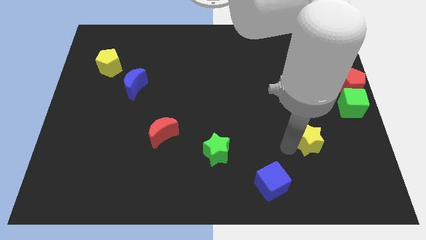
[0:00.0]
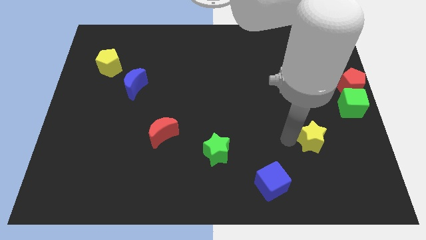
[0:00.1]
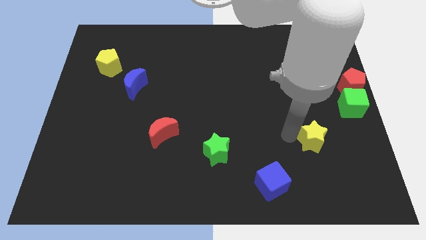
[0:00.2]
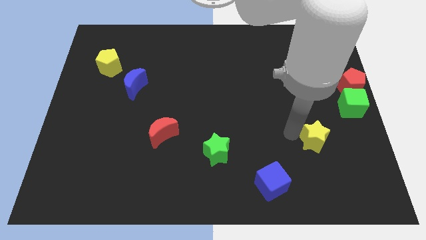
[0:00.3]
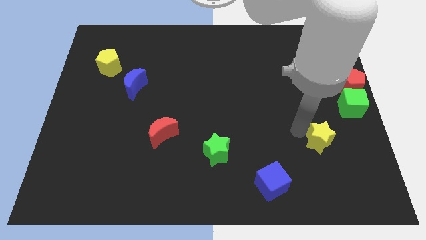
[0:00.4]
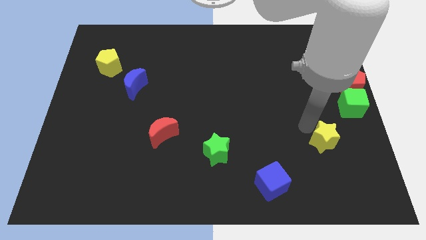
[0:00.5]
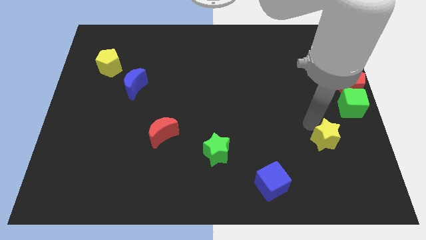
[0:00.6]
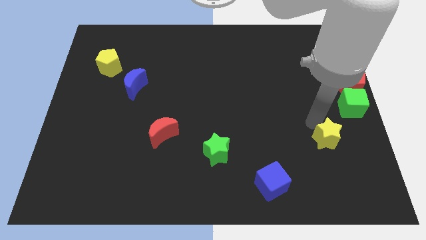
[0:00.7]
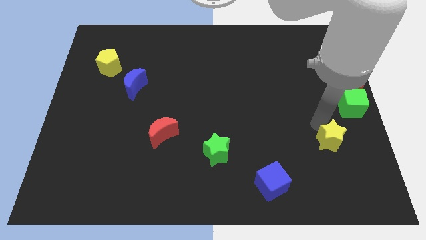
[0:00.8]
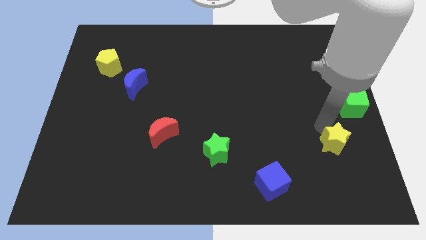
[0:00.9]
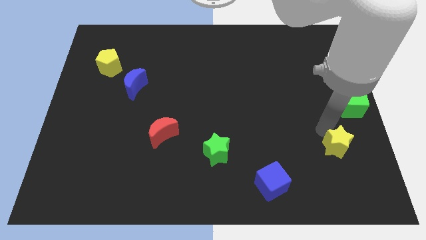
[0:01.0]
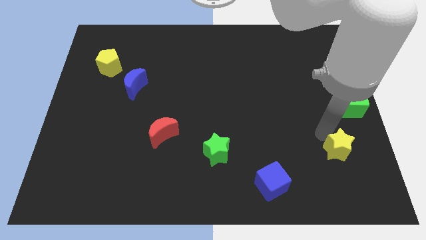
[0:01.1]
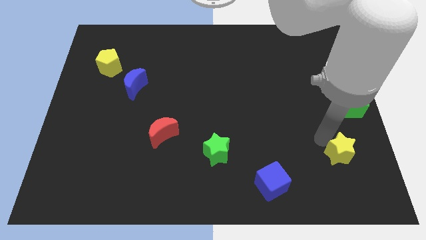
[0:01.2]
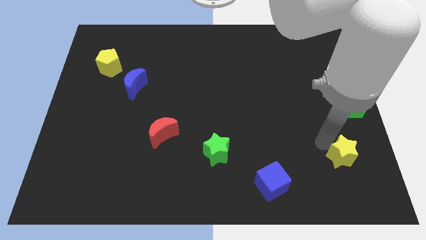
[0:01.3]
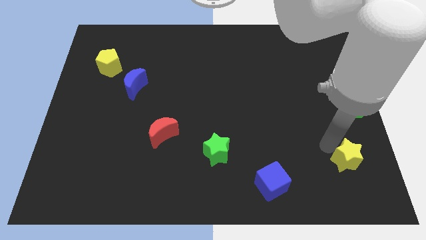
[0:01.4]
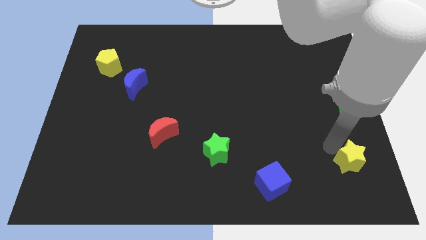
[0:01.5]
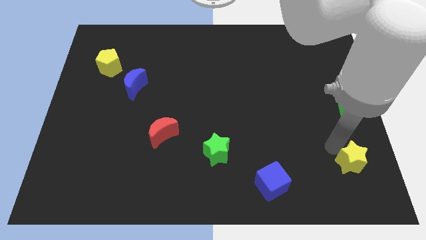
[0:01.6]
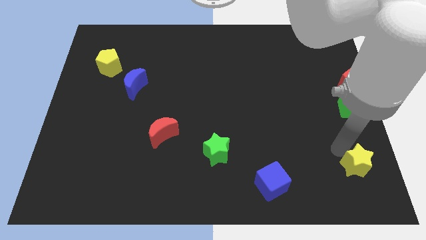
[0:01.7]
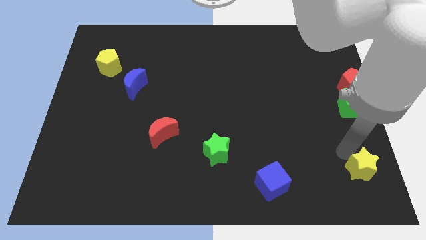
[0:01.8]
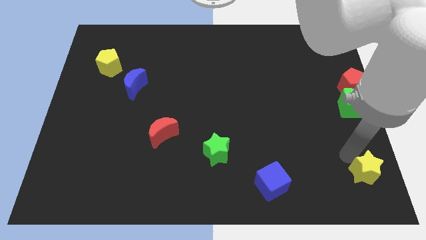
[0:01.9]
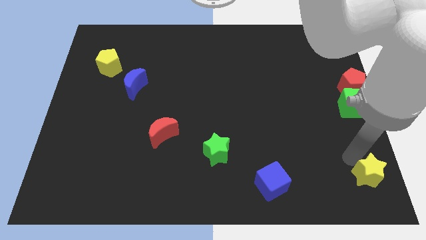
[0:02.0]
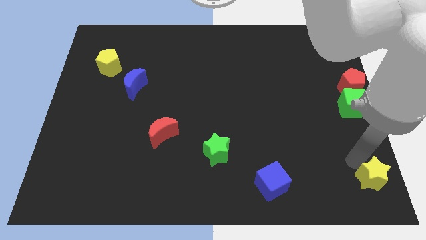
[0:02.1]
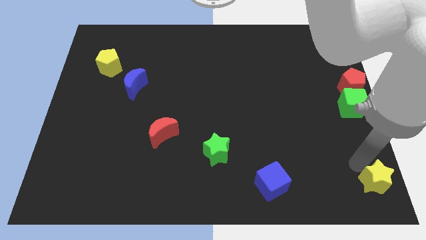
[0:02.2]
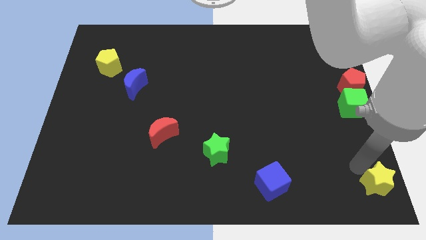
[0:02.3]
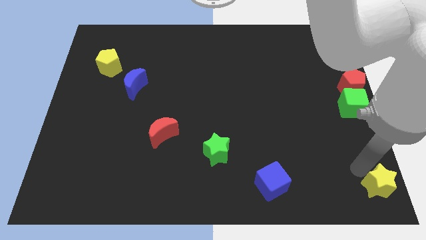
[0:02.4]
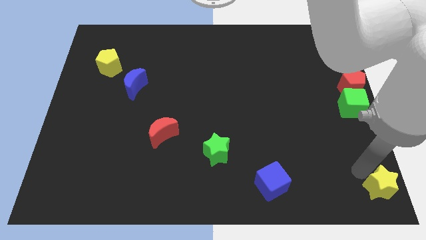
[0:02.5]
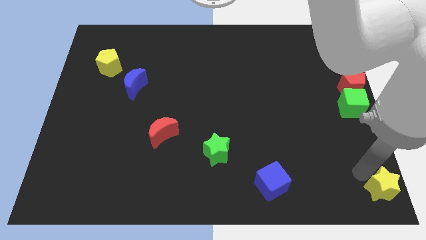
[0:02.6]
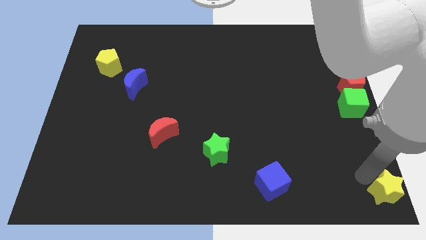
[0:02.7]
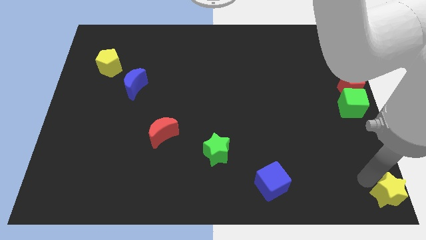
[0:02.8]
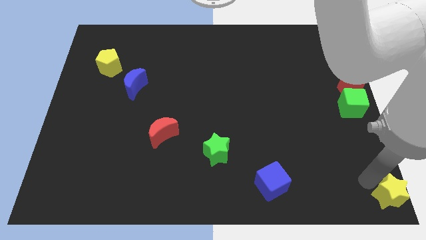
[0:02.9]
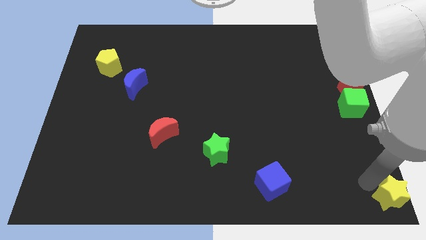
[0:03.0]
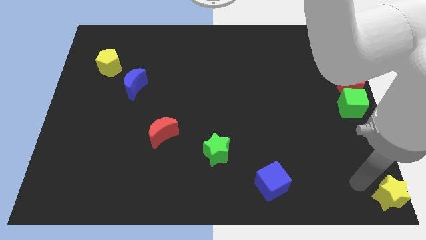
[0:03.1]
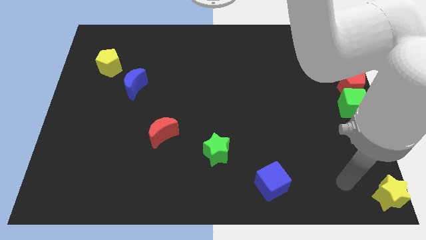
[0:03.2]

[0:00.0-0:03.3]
move the yellow star to the bottom right corner

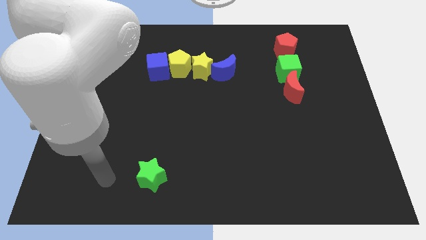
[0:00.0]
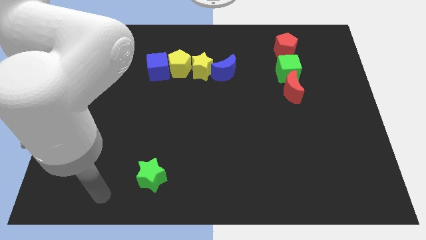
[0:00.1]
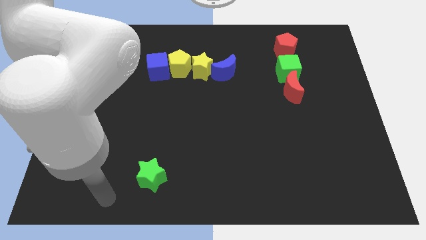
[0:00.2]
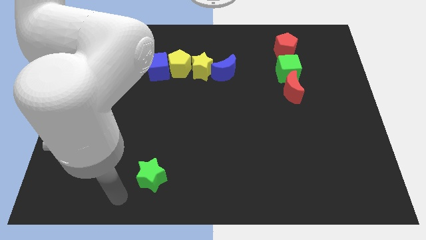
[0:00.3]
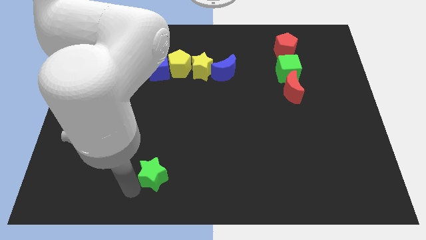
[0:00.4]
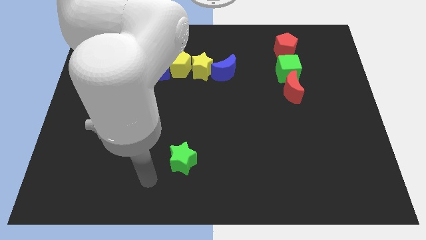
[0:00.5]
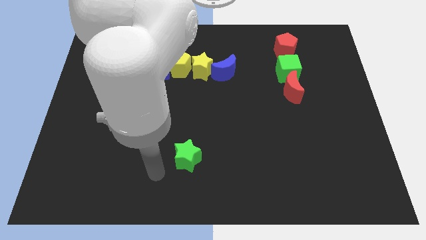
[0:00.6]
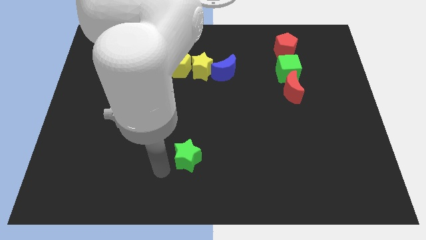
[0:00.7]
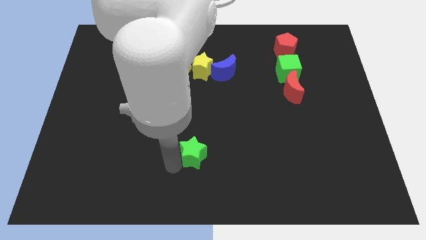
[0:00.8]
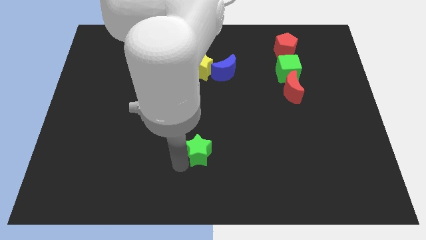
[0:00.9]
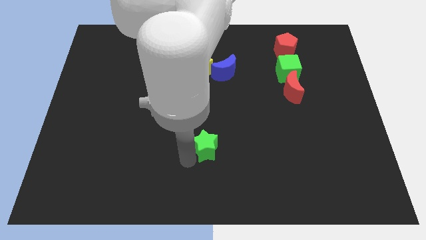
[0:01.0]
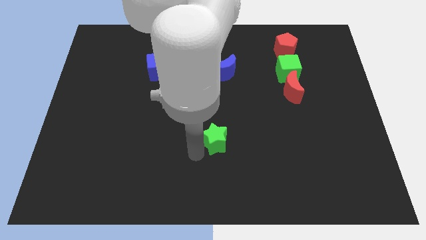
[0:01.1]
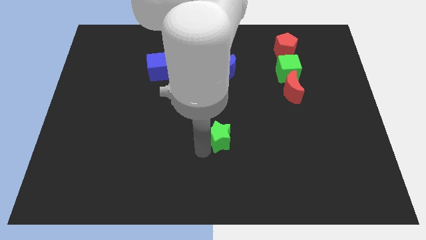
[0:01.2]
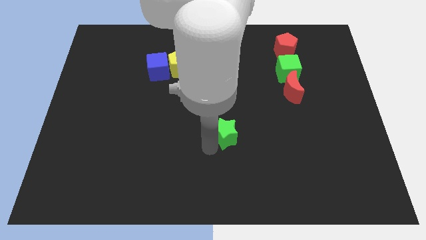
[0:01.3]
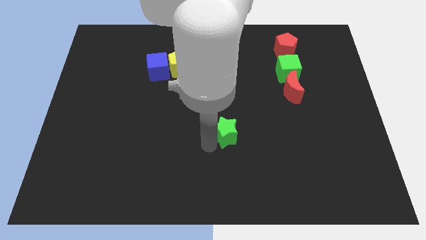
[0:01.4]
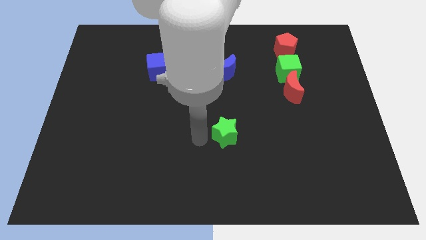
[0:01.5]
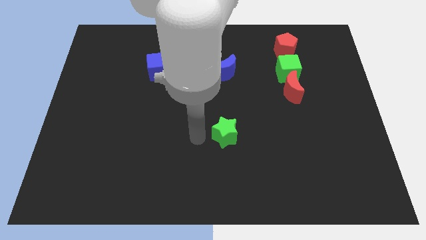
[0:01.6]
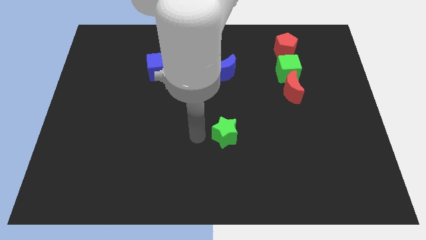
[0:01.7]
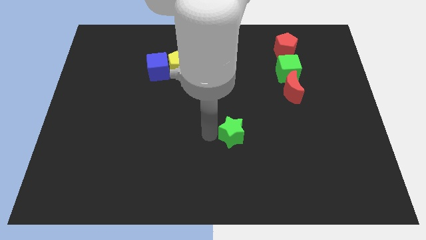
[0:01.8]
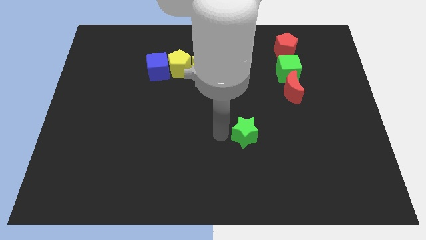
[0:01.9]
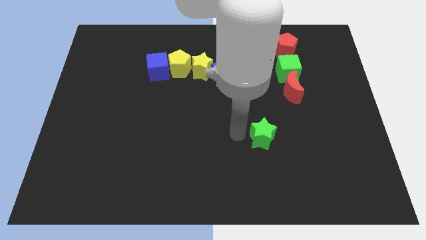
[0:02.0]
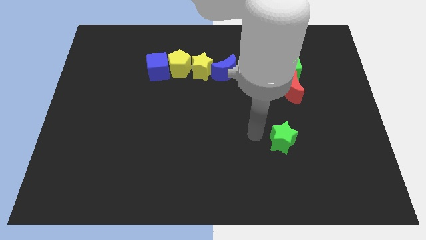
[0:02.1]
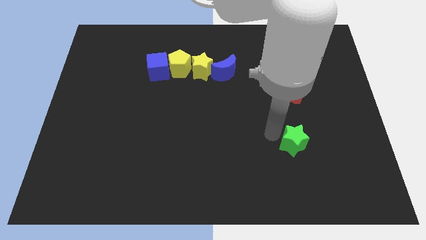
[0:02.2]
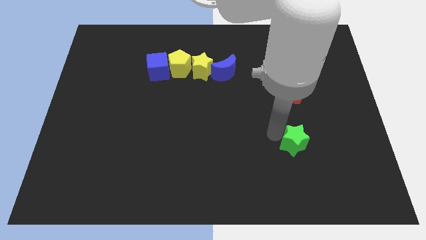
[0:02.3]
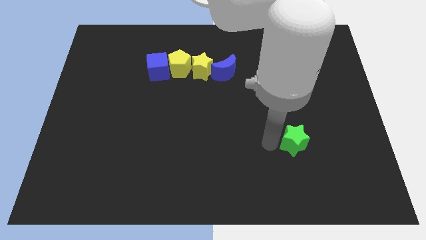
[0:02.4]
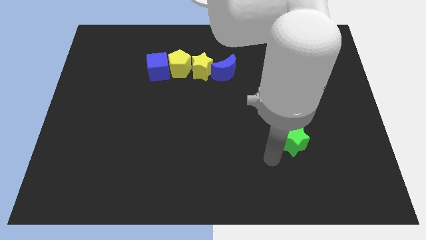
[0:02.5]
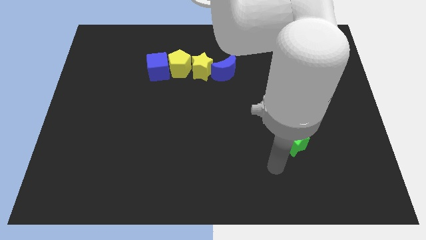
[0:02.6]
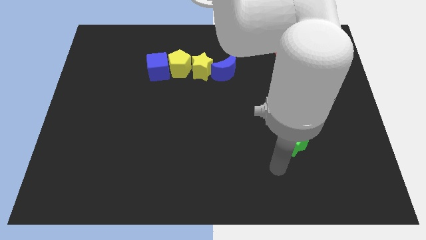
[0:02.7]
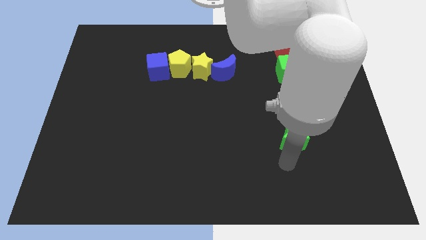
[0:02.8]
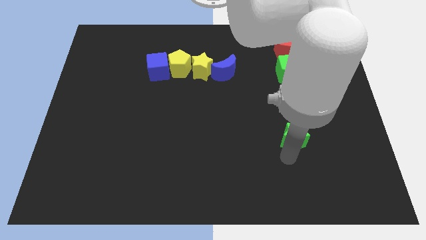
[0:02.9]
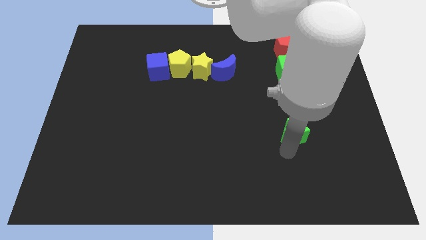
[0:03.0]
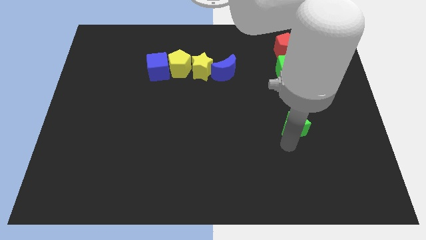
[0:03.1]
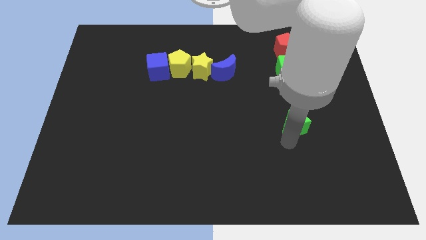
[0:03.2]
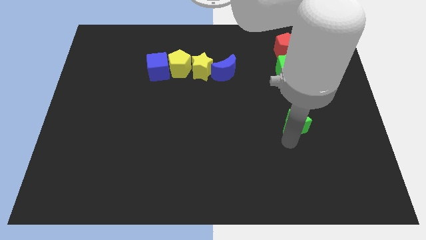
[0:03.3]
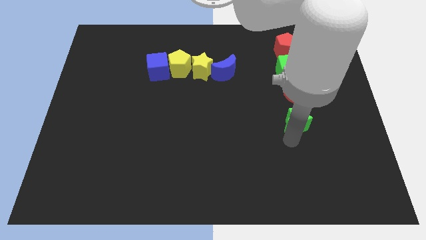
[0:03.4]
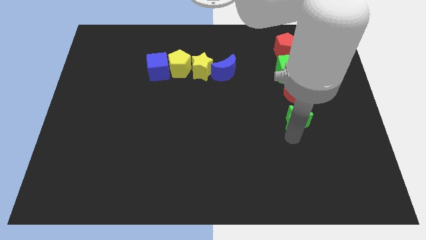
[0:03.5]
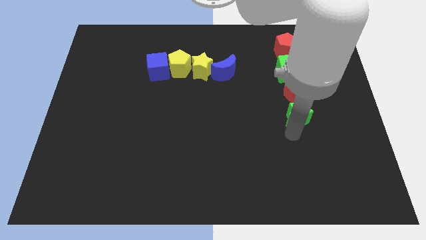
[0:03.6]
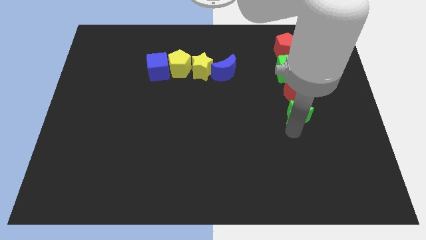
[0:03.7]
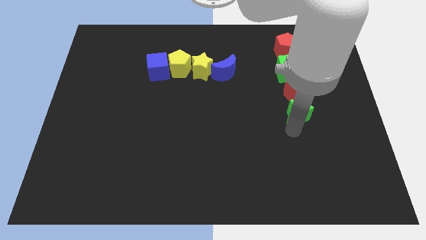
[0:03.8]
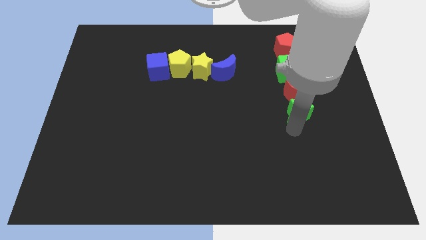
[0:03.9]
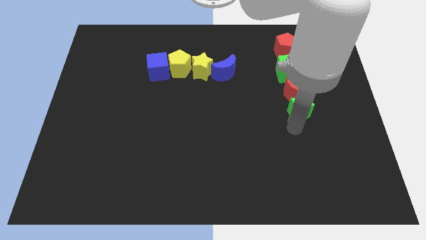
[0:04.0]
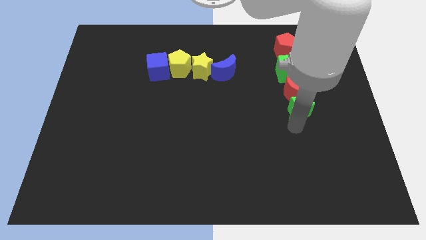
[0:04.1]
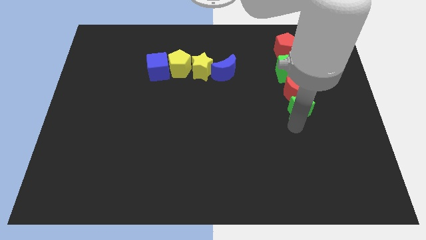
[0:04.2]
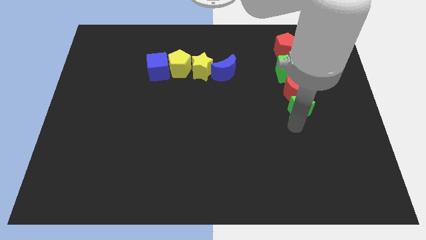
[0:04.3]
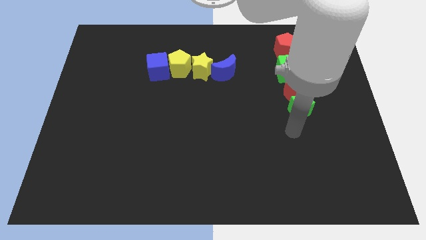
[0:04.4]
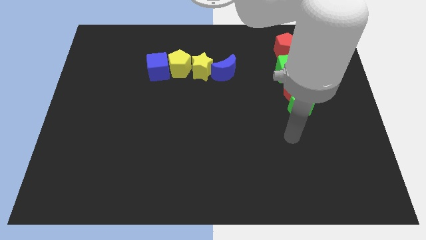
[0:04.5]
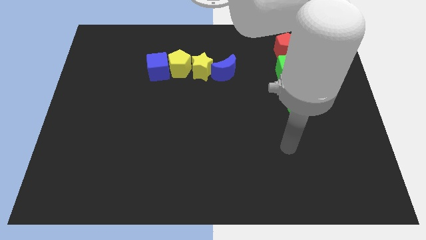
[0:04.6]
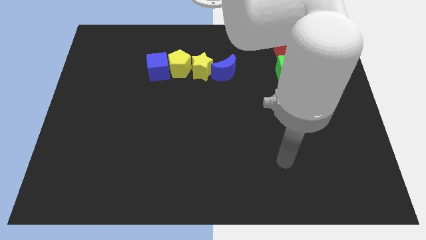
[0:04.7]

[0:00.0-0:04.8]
move the green star to the bottom of the red crescent

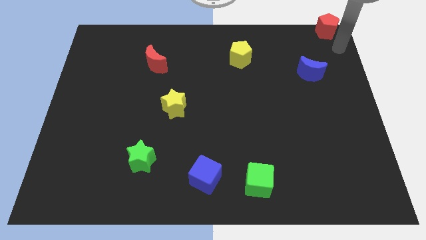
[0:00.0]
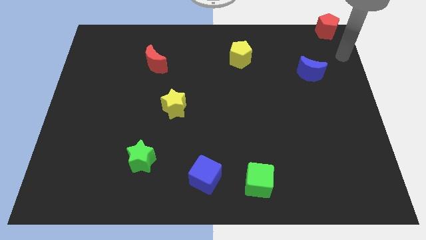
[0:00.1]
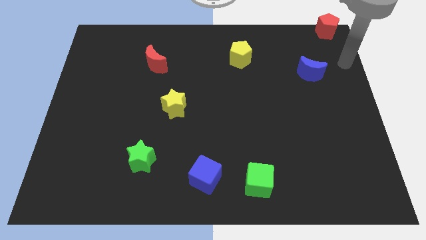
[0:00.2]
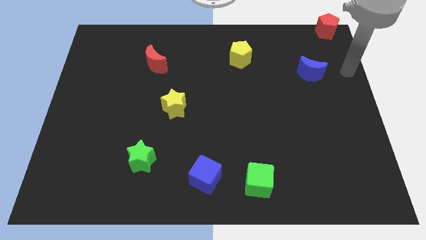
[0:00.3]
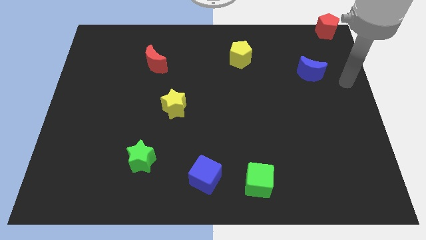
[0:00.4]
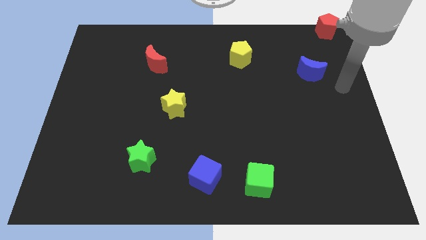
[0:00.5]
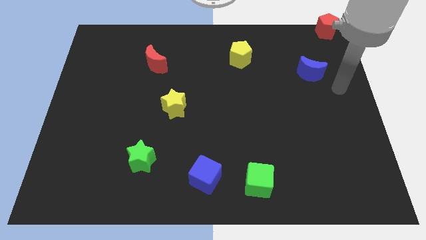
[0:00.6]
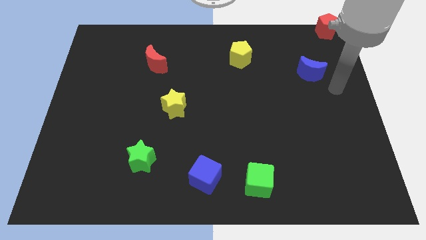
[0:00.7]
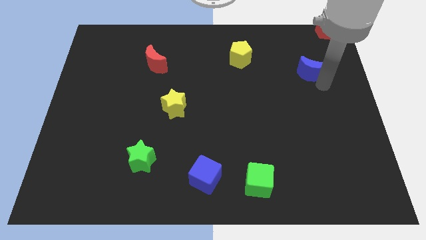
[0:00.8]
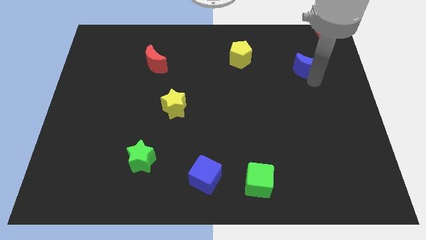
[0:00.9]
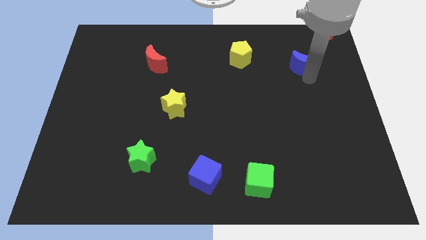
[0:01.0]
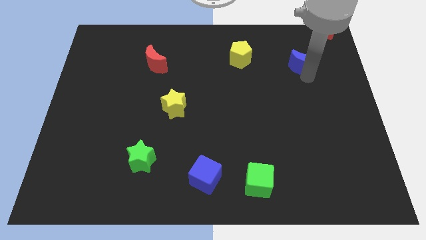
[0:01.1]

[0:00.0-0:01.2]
go near blue moon
